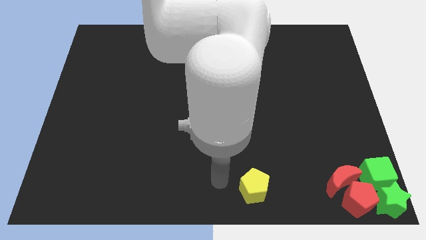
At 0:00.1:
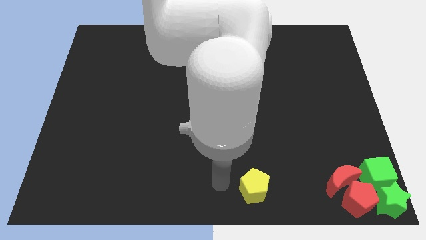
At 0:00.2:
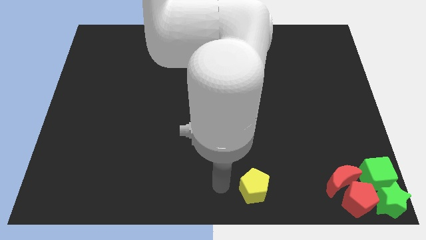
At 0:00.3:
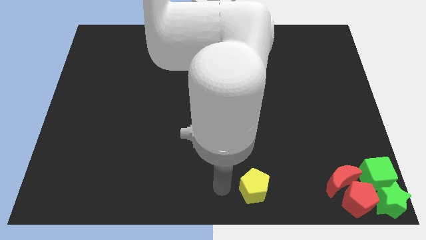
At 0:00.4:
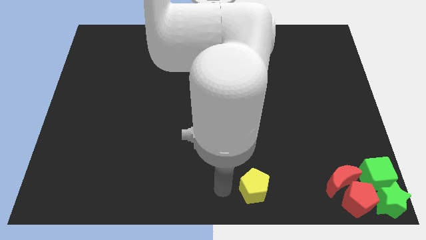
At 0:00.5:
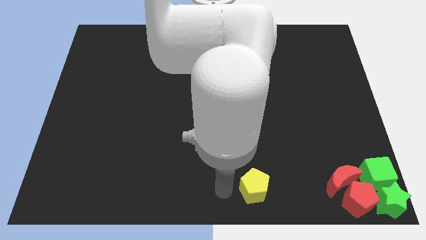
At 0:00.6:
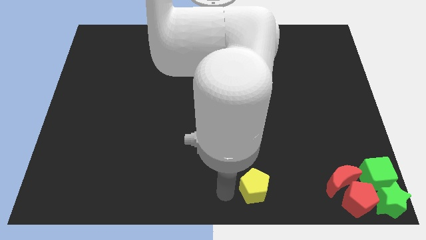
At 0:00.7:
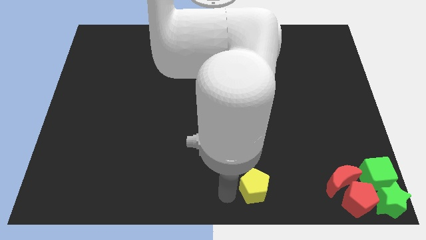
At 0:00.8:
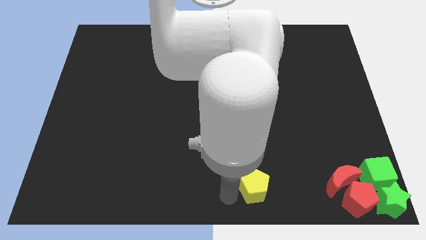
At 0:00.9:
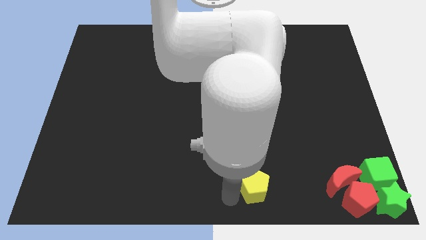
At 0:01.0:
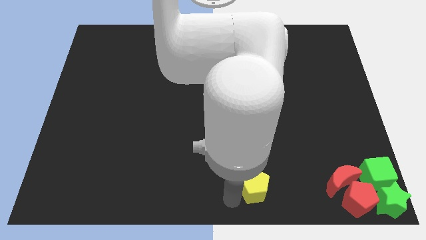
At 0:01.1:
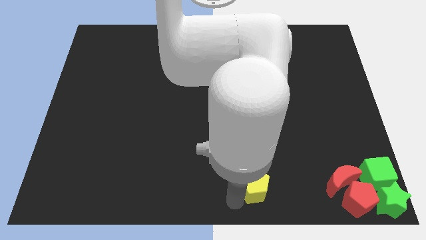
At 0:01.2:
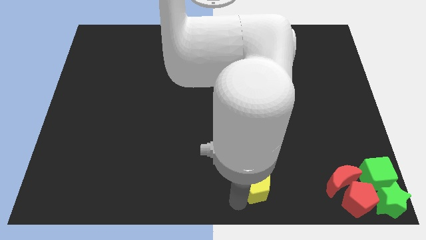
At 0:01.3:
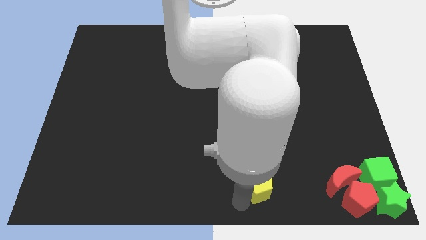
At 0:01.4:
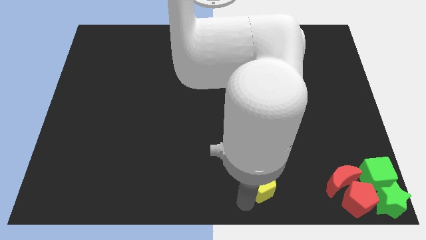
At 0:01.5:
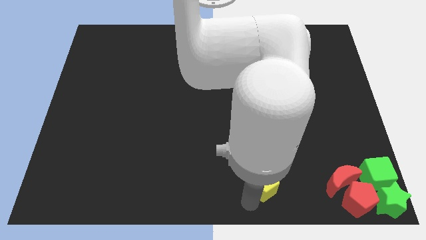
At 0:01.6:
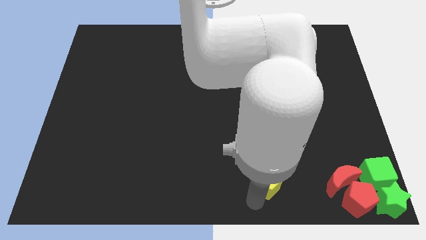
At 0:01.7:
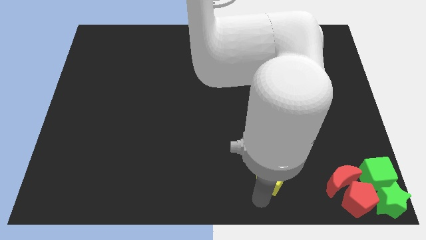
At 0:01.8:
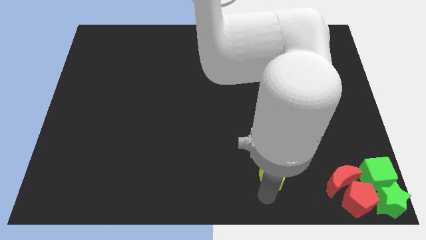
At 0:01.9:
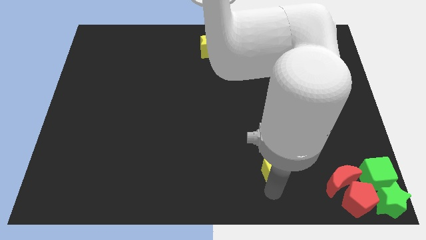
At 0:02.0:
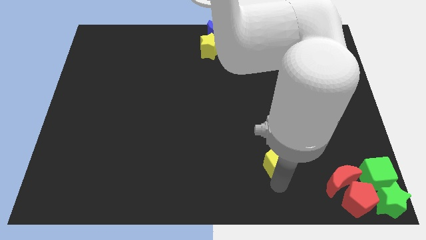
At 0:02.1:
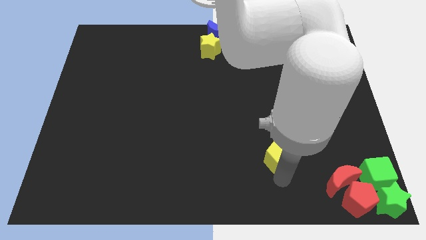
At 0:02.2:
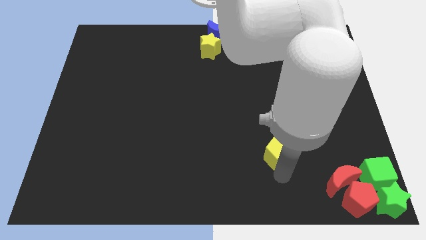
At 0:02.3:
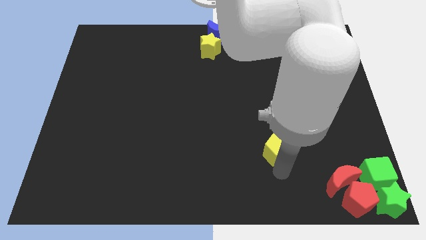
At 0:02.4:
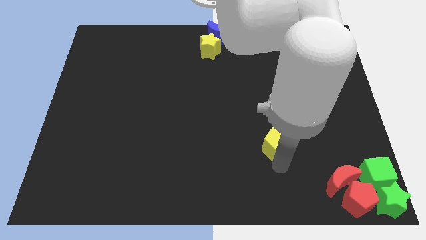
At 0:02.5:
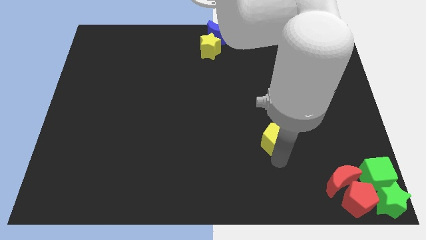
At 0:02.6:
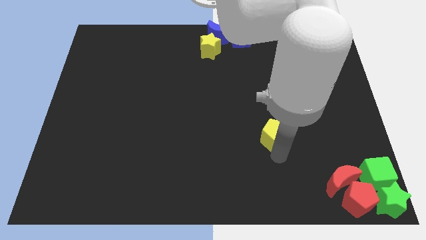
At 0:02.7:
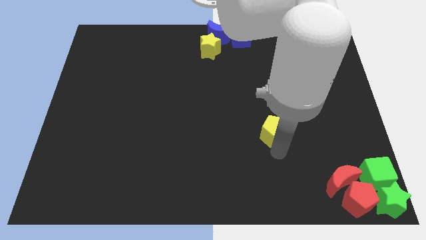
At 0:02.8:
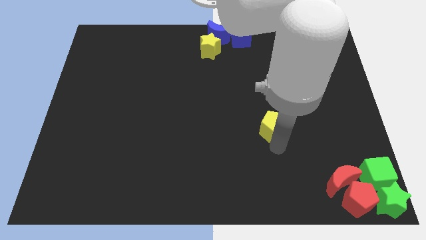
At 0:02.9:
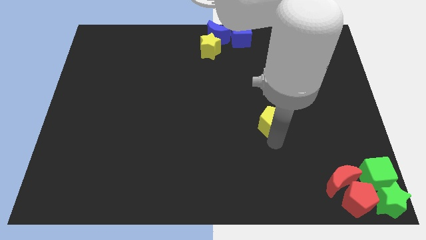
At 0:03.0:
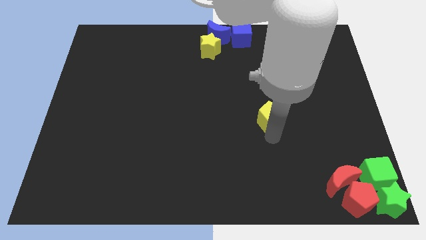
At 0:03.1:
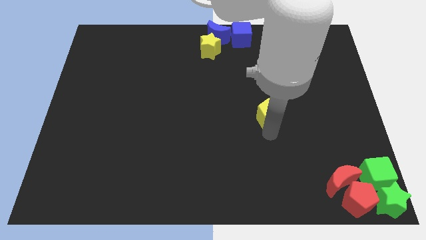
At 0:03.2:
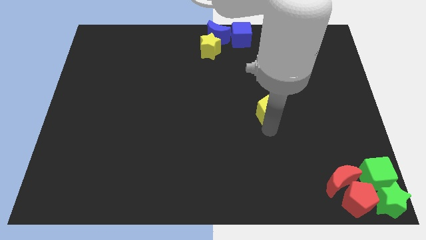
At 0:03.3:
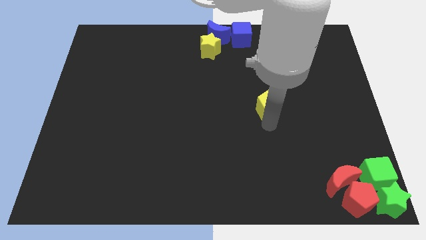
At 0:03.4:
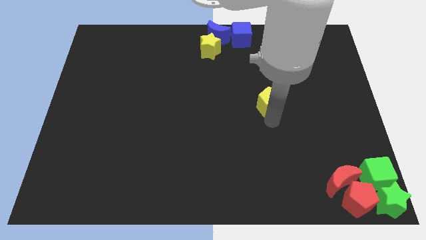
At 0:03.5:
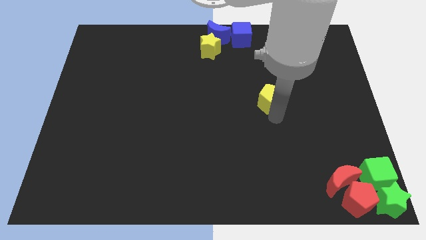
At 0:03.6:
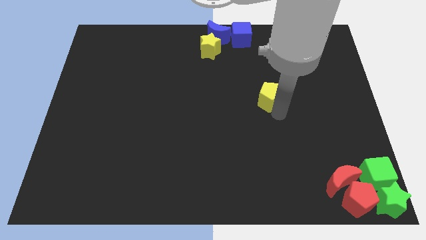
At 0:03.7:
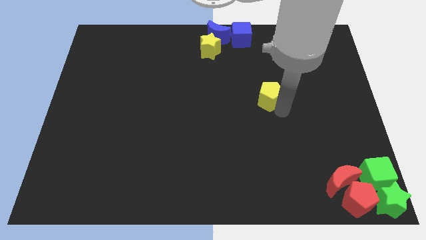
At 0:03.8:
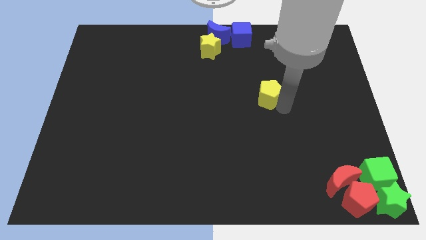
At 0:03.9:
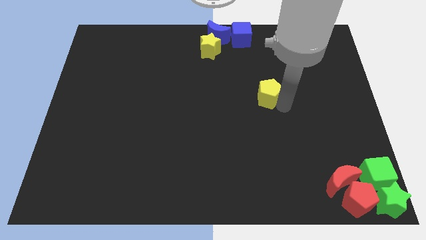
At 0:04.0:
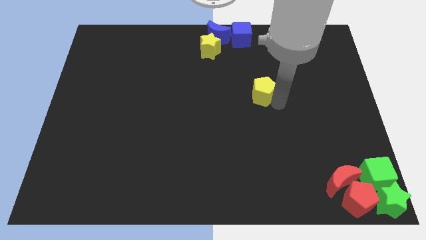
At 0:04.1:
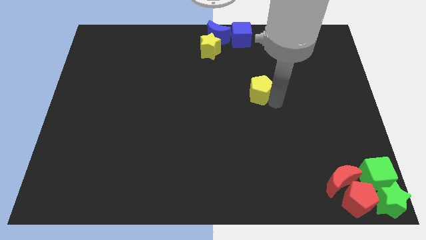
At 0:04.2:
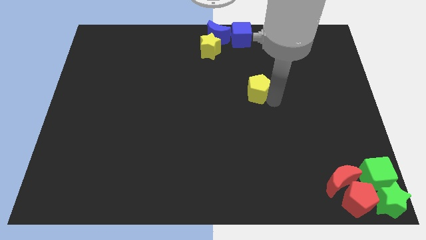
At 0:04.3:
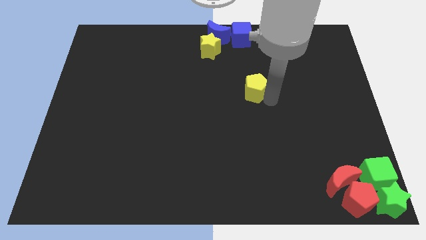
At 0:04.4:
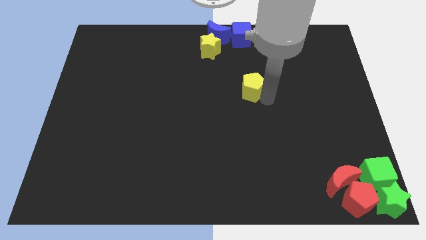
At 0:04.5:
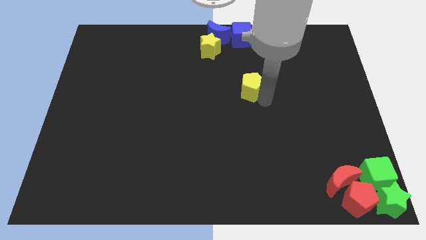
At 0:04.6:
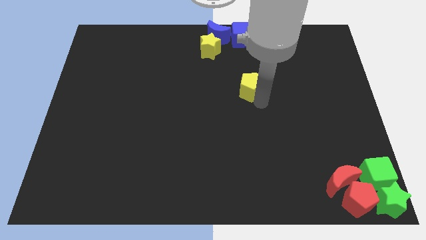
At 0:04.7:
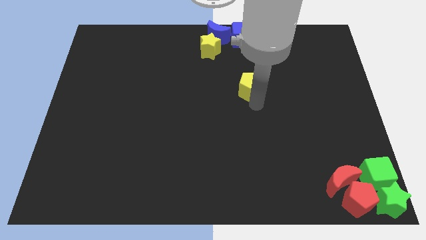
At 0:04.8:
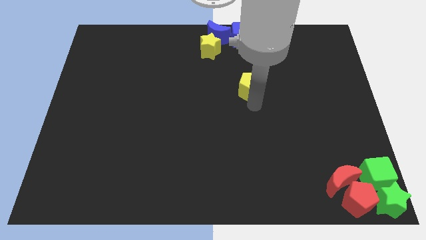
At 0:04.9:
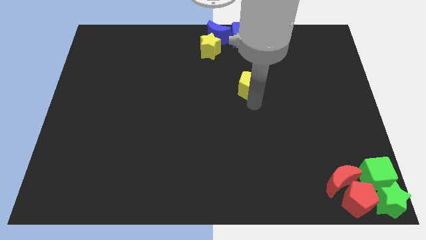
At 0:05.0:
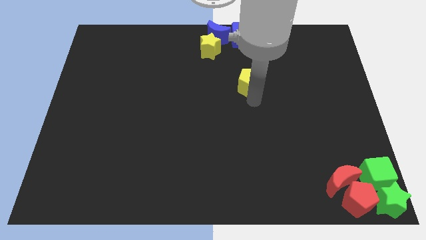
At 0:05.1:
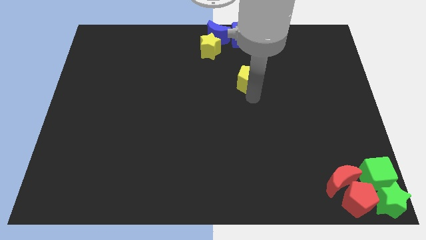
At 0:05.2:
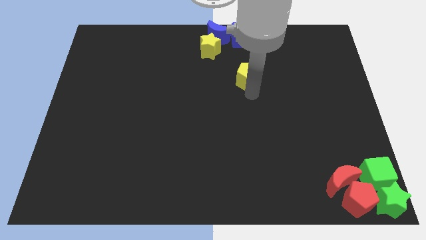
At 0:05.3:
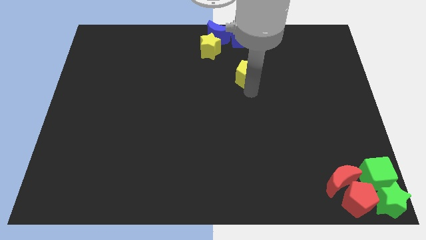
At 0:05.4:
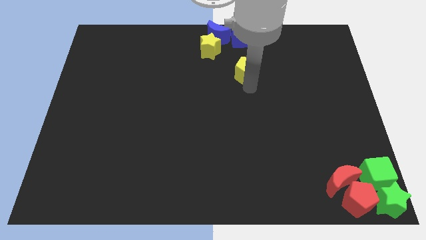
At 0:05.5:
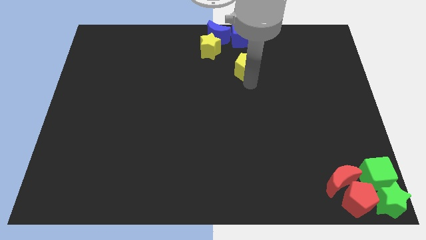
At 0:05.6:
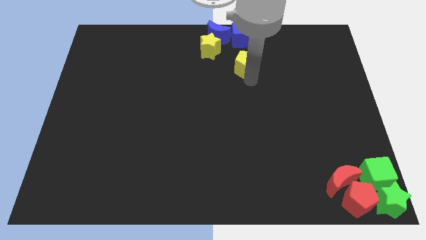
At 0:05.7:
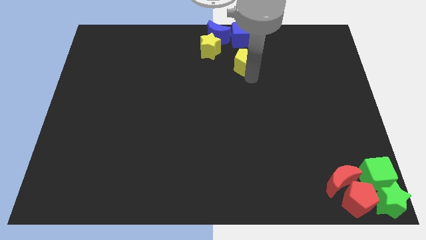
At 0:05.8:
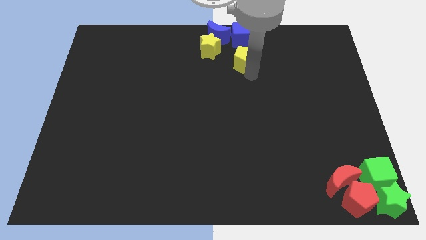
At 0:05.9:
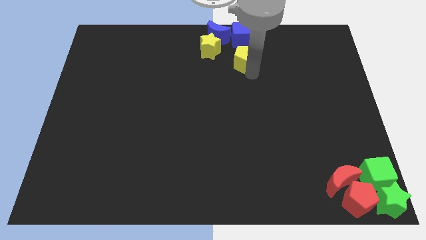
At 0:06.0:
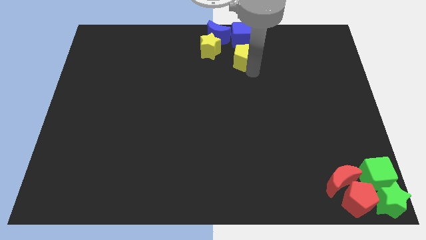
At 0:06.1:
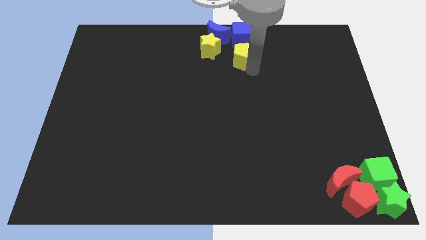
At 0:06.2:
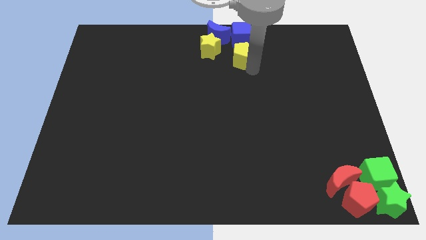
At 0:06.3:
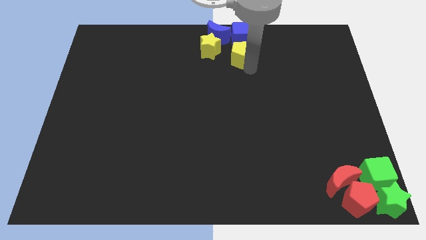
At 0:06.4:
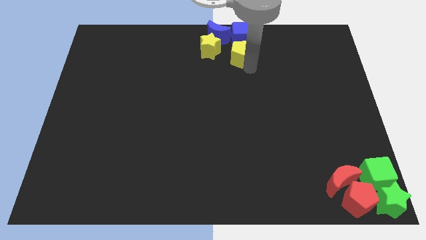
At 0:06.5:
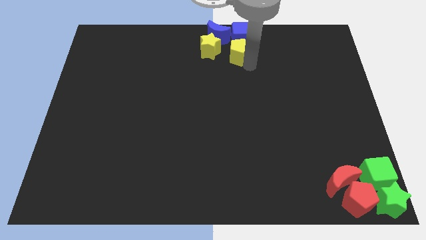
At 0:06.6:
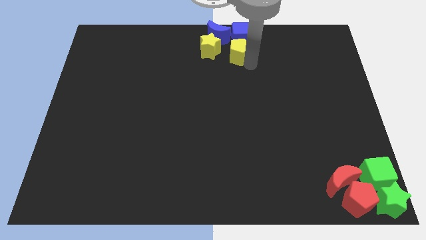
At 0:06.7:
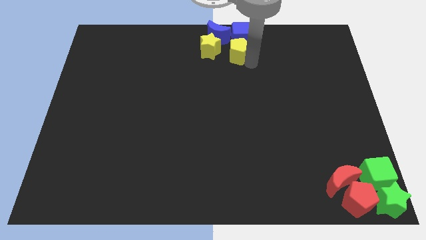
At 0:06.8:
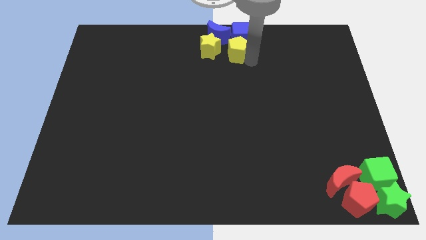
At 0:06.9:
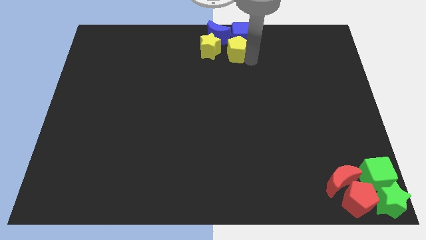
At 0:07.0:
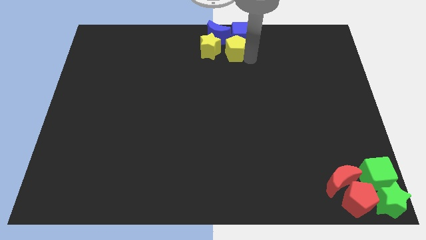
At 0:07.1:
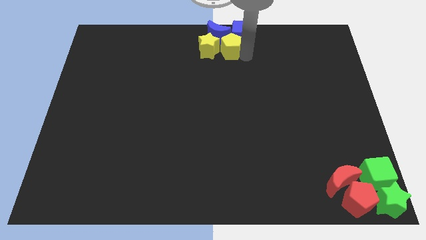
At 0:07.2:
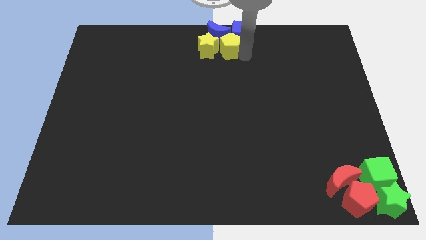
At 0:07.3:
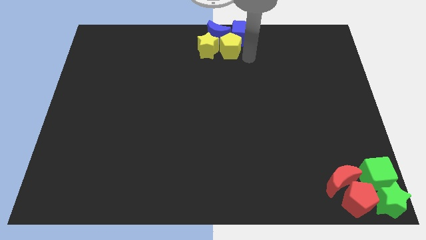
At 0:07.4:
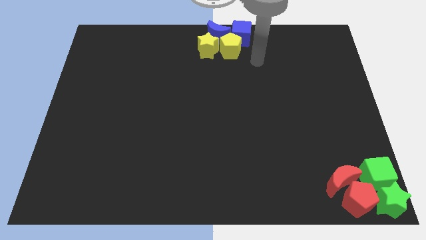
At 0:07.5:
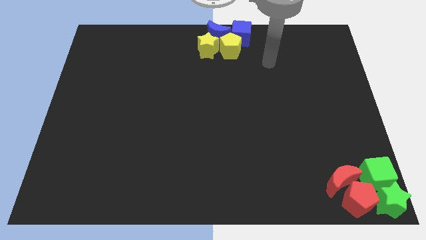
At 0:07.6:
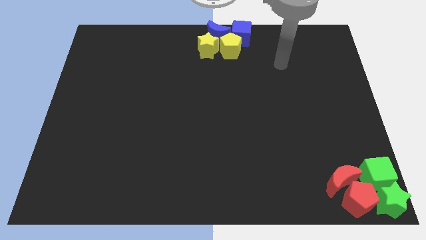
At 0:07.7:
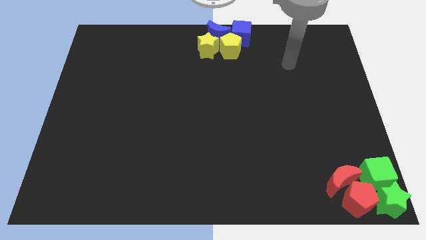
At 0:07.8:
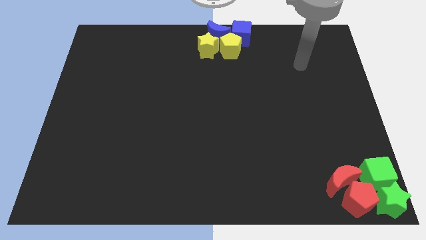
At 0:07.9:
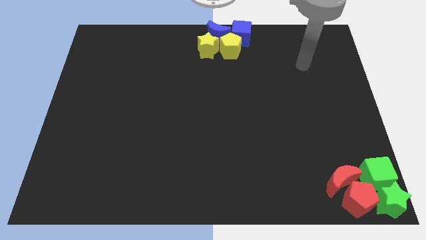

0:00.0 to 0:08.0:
push the yellow pentagon into the right of the yellow star

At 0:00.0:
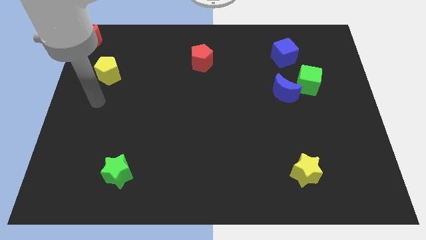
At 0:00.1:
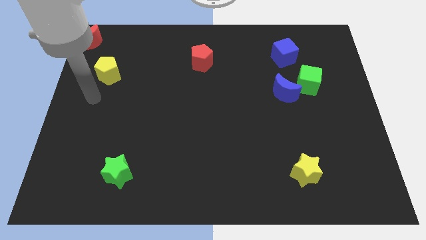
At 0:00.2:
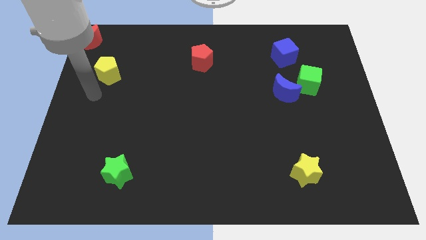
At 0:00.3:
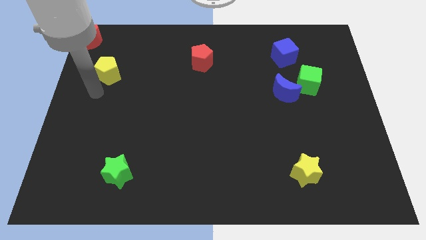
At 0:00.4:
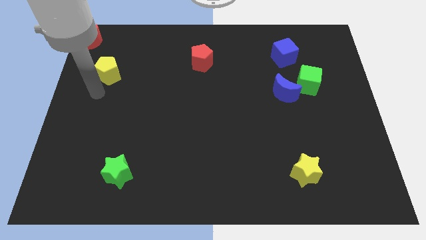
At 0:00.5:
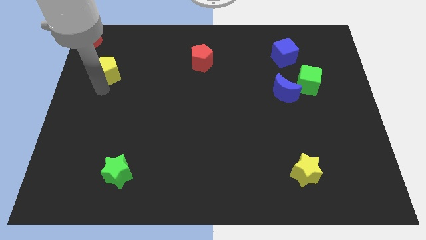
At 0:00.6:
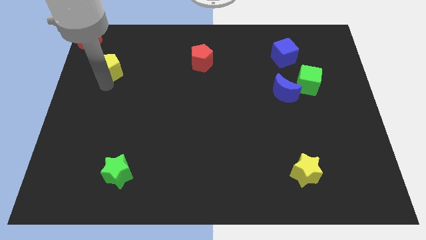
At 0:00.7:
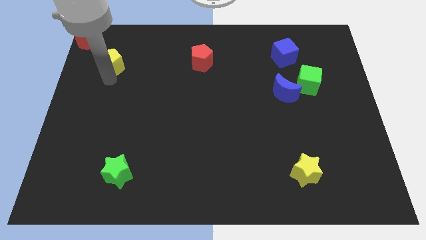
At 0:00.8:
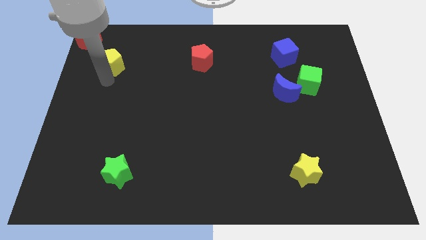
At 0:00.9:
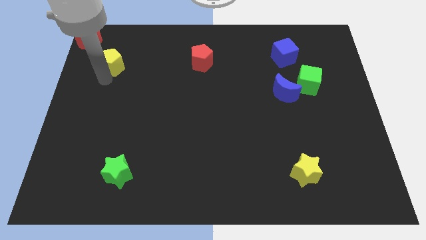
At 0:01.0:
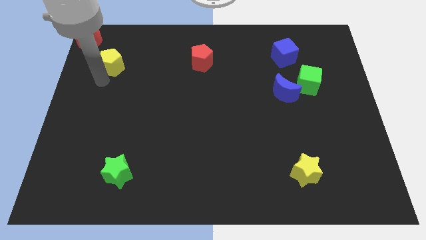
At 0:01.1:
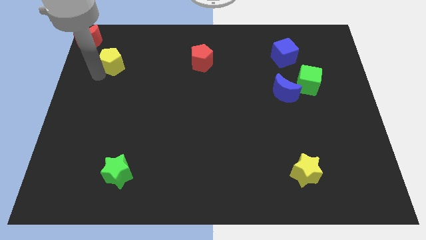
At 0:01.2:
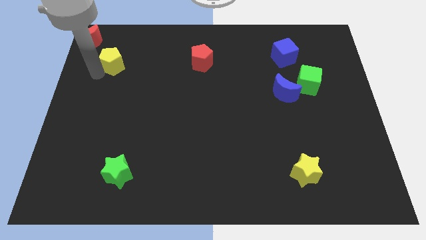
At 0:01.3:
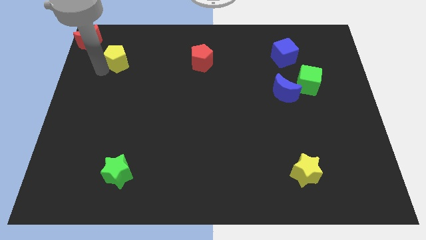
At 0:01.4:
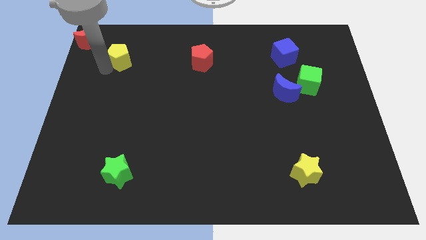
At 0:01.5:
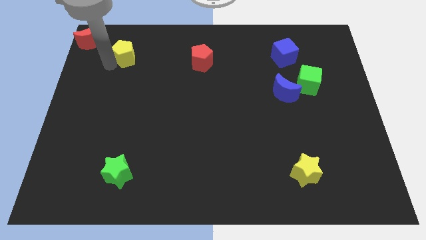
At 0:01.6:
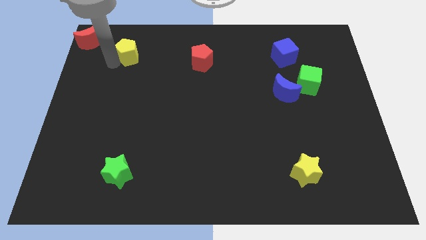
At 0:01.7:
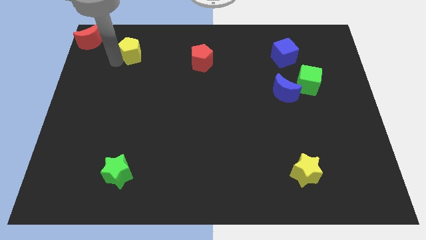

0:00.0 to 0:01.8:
push the yellow pentagon to the left of the red pentagon
